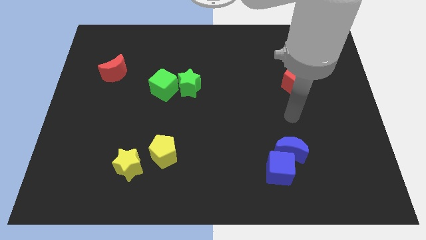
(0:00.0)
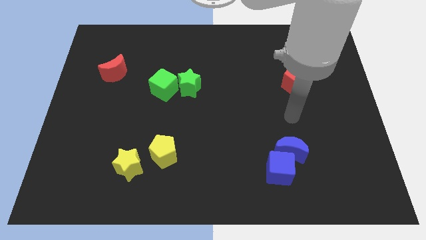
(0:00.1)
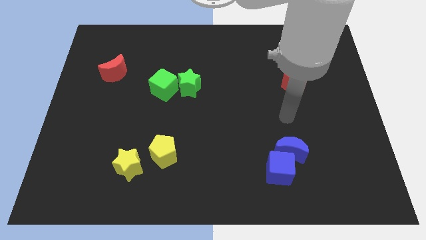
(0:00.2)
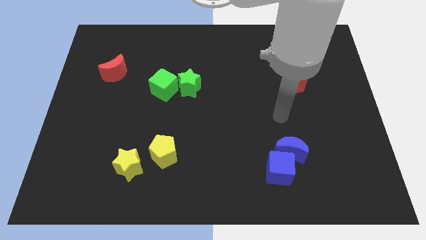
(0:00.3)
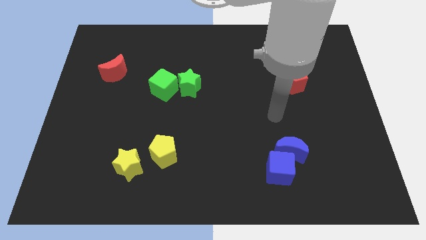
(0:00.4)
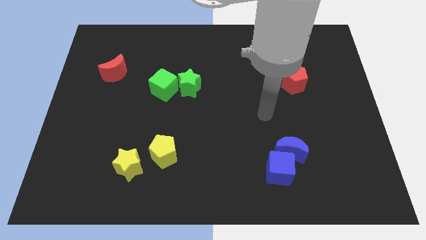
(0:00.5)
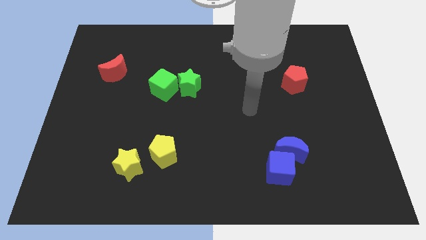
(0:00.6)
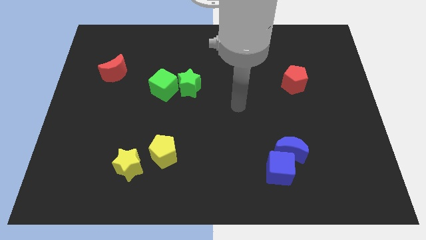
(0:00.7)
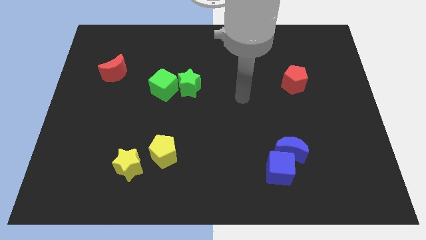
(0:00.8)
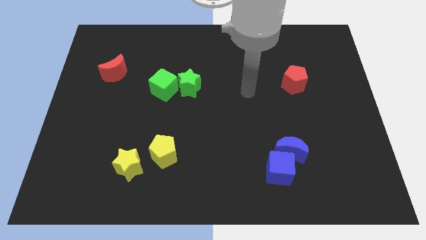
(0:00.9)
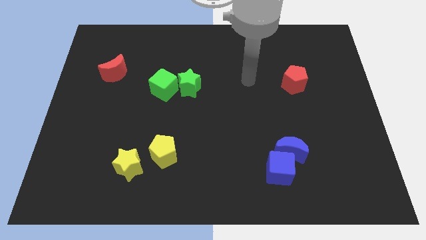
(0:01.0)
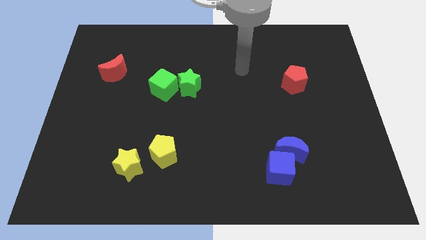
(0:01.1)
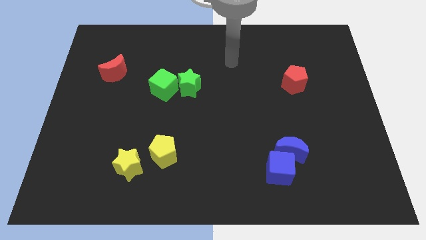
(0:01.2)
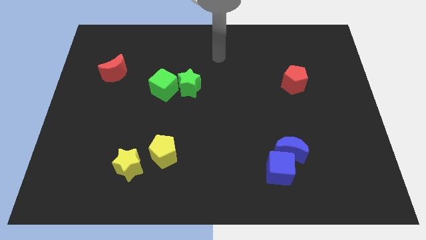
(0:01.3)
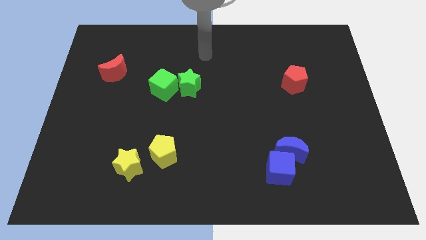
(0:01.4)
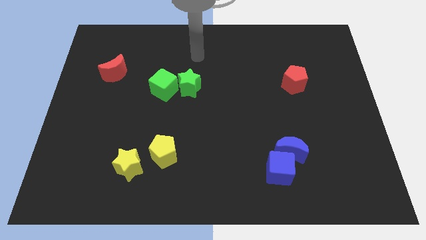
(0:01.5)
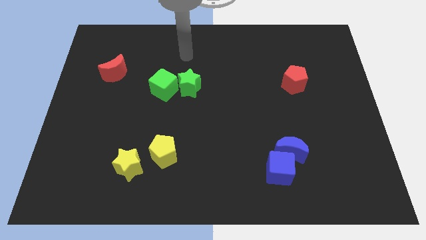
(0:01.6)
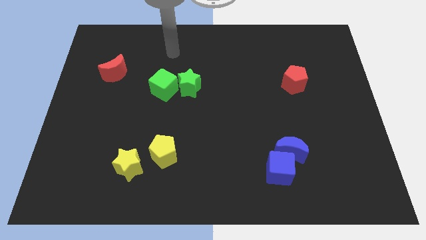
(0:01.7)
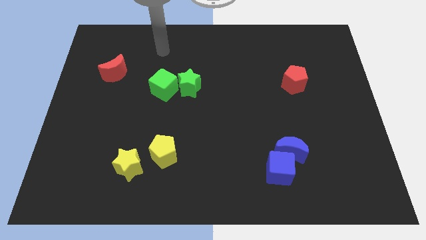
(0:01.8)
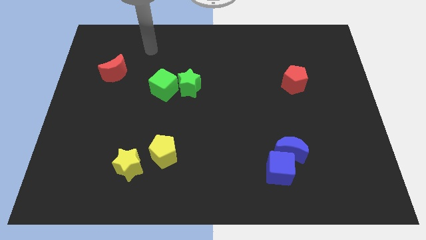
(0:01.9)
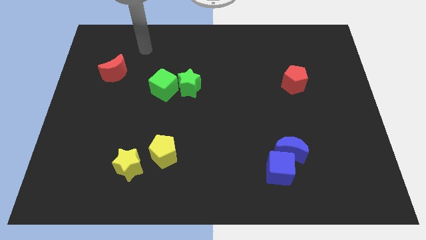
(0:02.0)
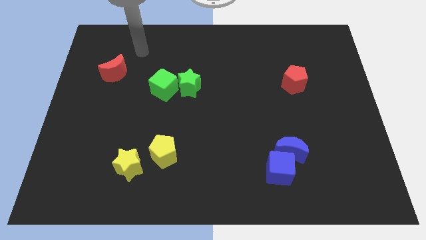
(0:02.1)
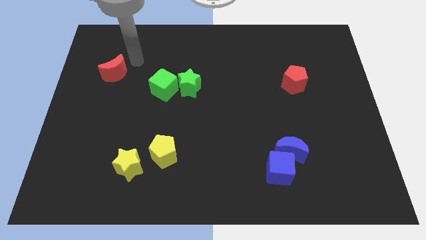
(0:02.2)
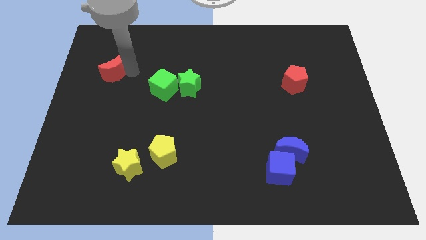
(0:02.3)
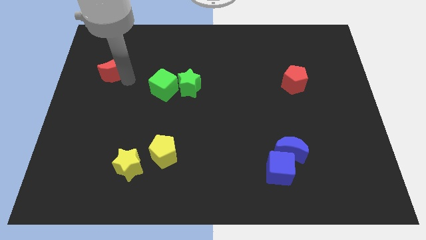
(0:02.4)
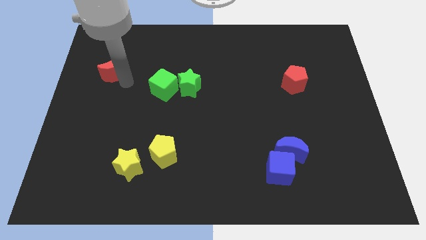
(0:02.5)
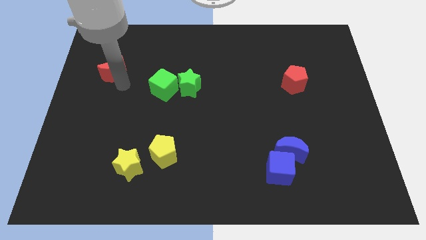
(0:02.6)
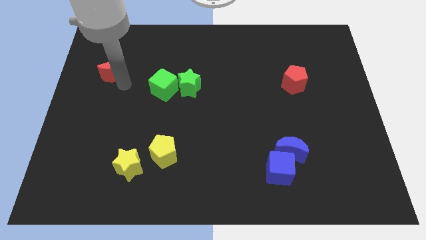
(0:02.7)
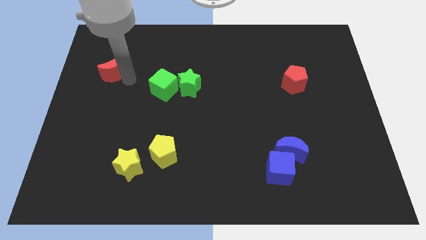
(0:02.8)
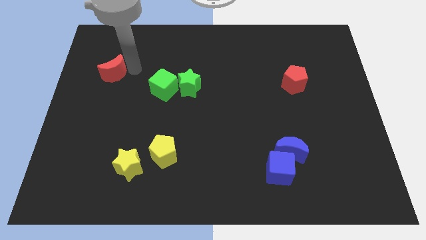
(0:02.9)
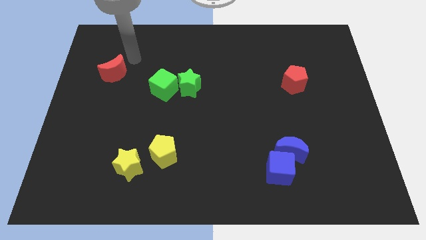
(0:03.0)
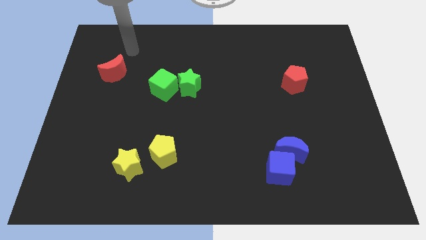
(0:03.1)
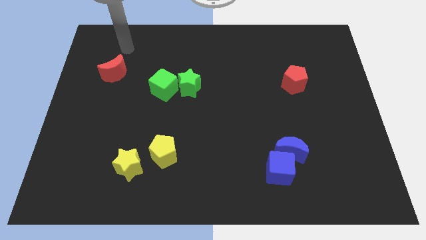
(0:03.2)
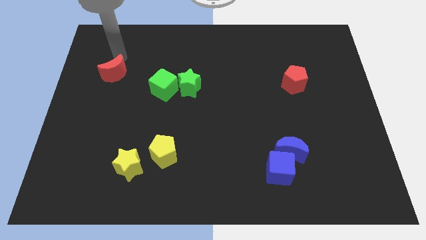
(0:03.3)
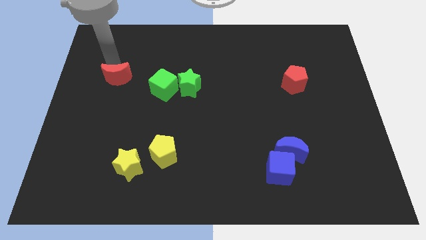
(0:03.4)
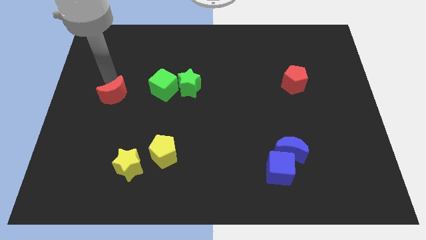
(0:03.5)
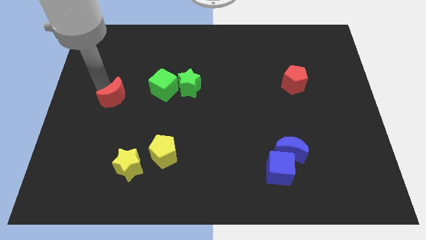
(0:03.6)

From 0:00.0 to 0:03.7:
move the red moon towards the bottom side

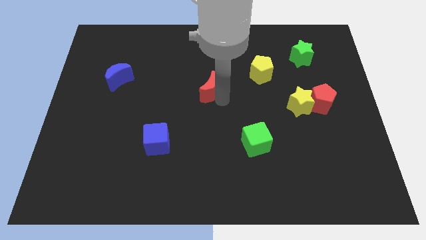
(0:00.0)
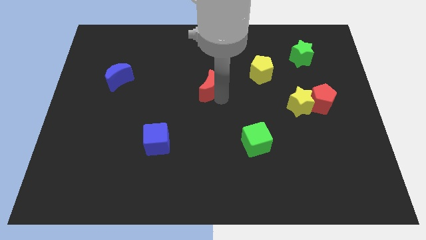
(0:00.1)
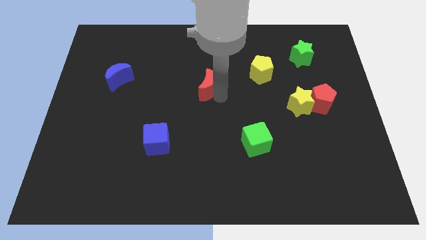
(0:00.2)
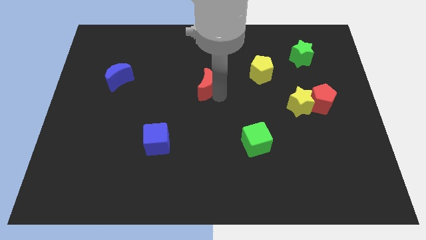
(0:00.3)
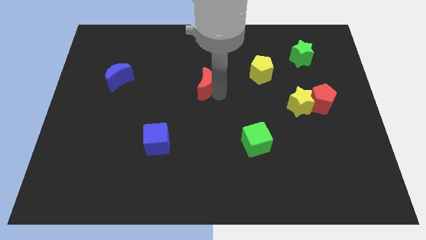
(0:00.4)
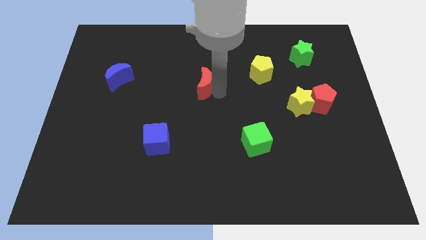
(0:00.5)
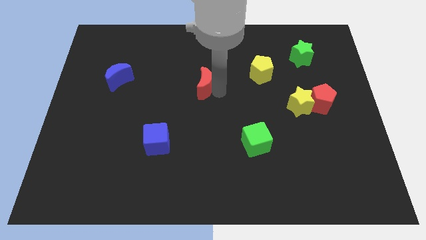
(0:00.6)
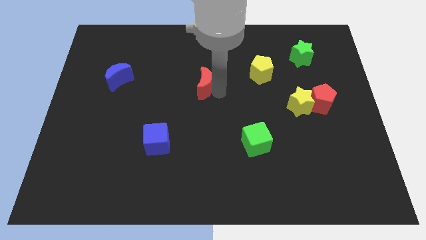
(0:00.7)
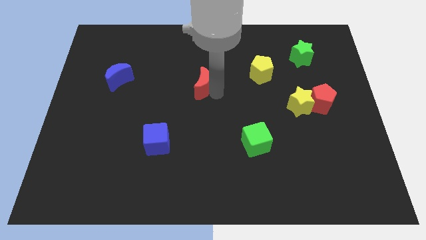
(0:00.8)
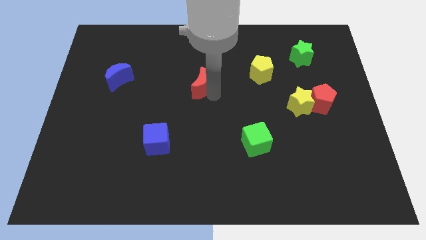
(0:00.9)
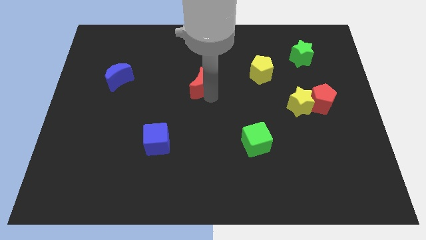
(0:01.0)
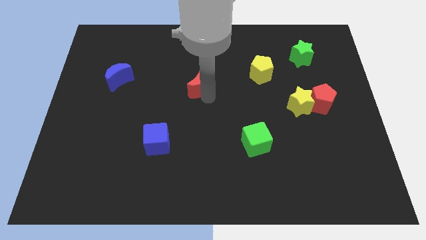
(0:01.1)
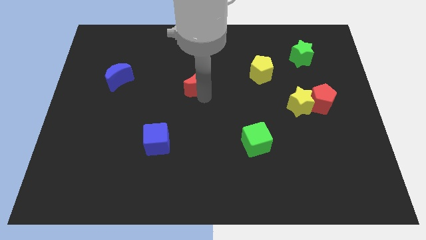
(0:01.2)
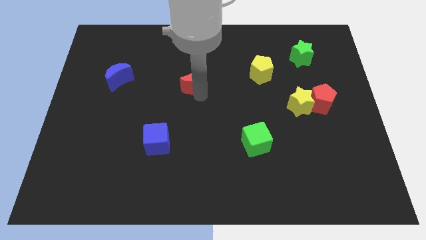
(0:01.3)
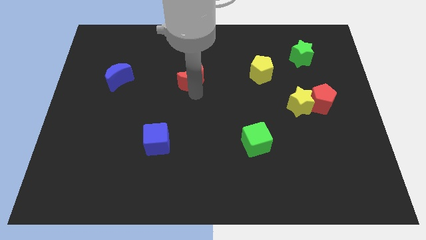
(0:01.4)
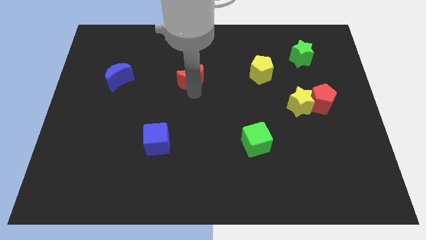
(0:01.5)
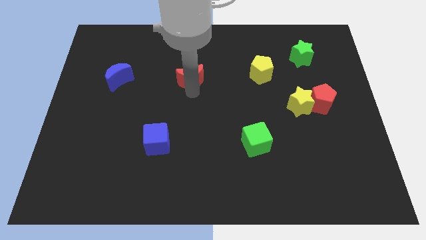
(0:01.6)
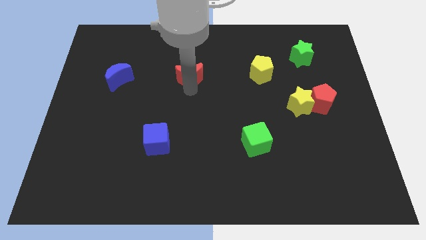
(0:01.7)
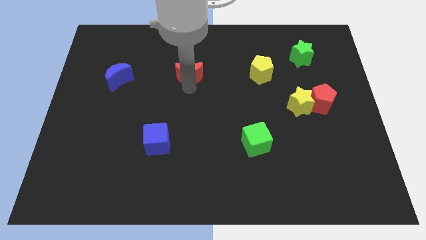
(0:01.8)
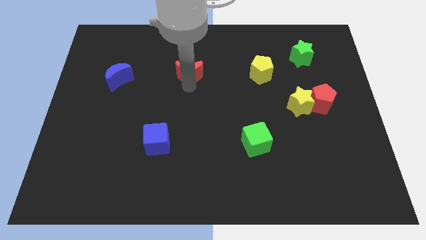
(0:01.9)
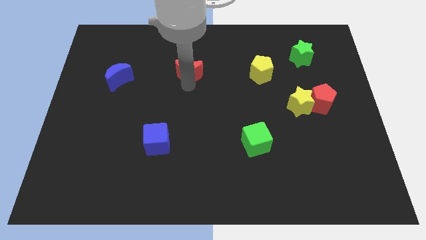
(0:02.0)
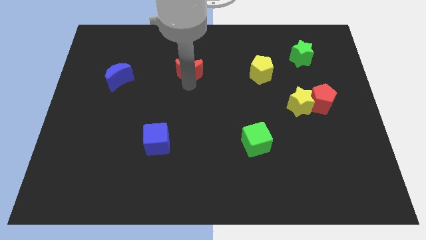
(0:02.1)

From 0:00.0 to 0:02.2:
place the red moon in between yellow pentagon and blue moon

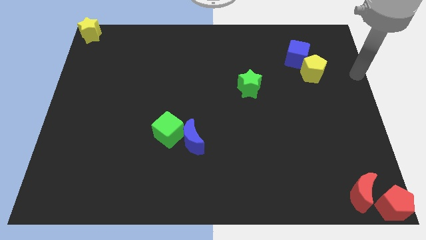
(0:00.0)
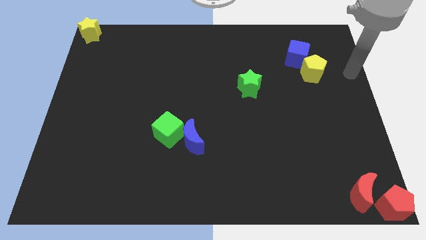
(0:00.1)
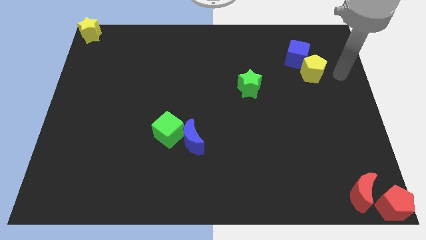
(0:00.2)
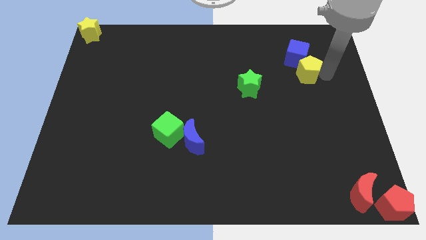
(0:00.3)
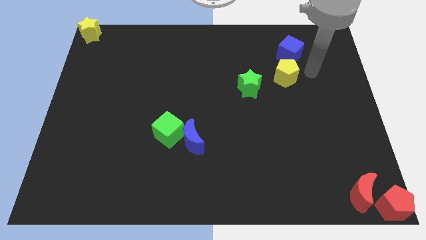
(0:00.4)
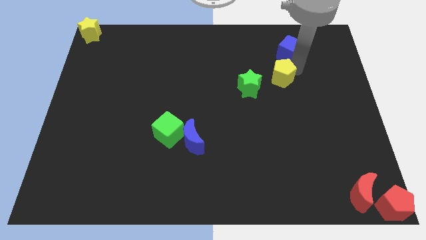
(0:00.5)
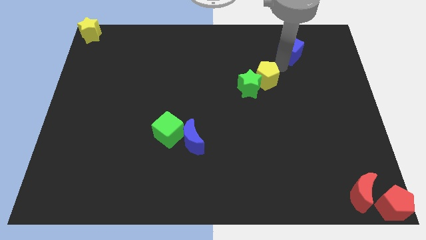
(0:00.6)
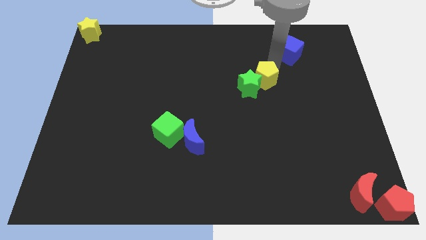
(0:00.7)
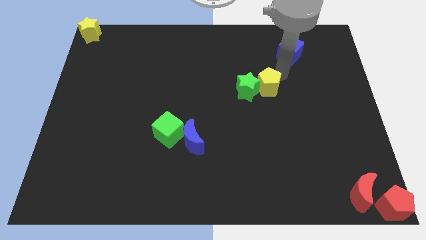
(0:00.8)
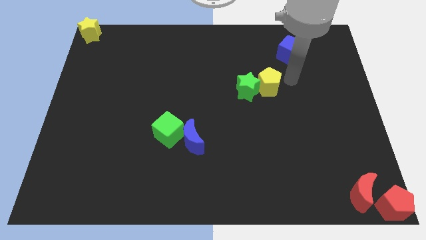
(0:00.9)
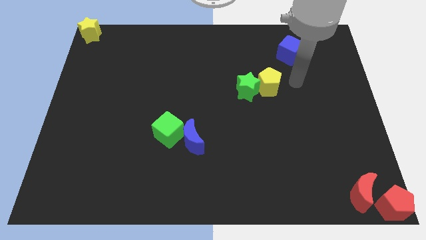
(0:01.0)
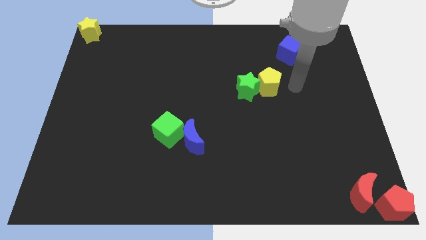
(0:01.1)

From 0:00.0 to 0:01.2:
push the green star with the yellow pentagon

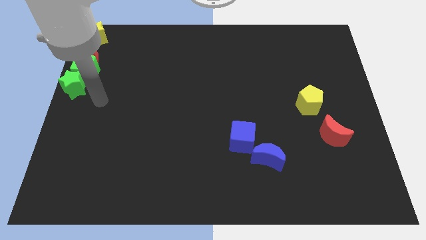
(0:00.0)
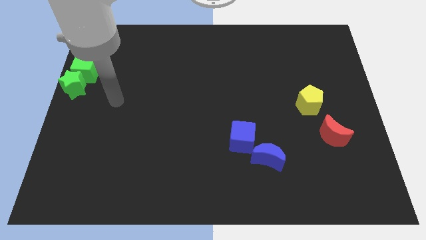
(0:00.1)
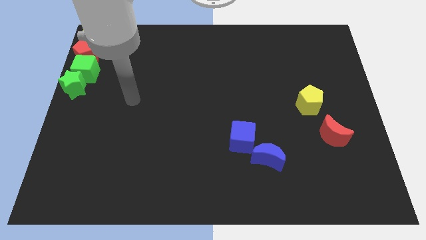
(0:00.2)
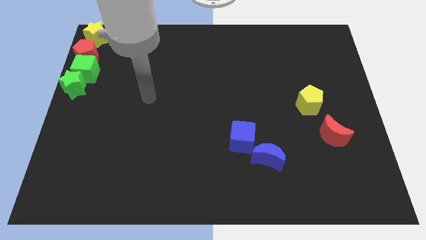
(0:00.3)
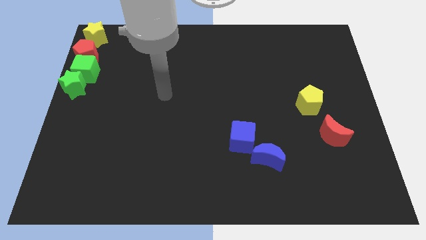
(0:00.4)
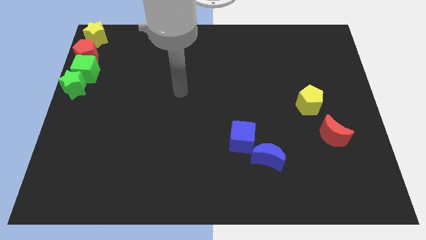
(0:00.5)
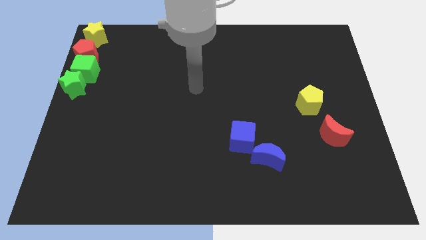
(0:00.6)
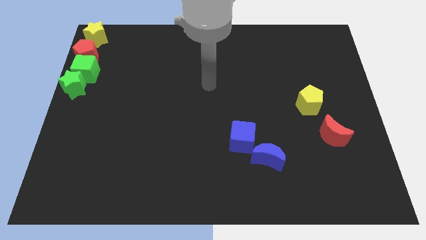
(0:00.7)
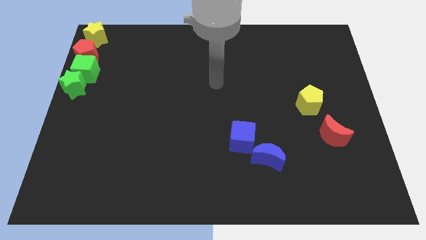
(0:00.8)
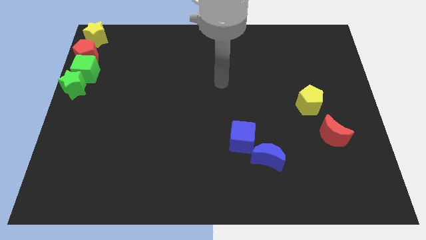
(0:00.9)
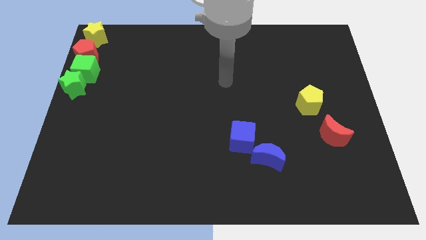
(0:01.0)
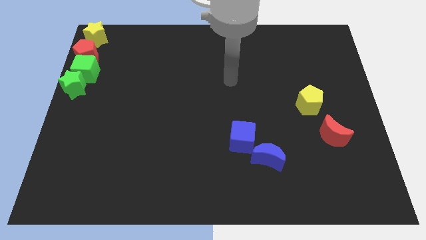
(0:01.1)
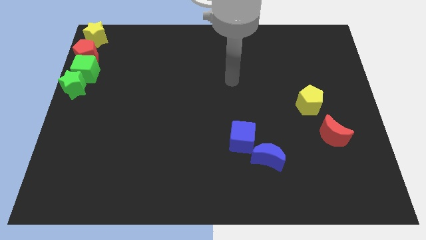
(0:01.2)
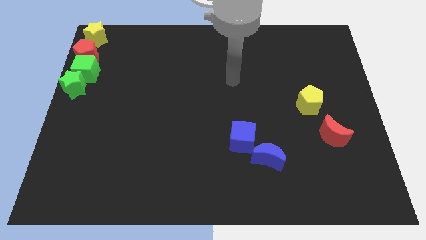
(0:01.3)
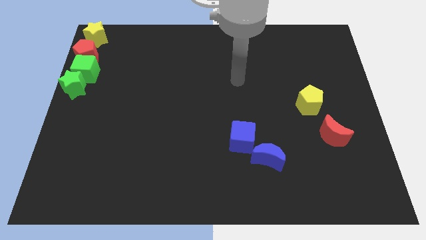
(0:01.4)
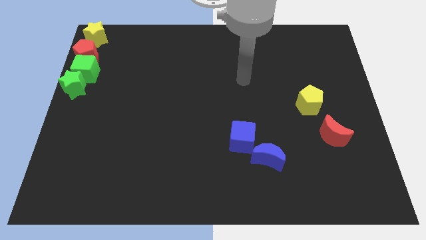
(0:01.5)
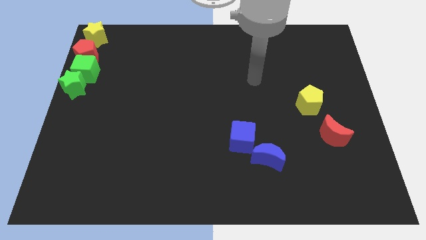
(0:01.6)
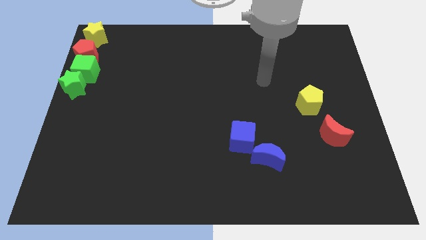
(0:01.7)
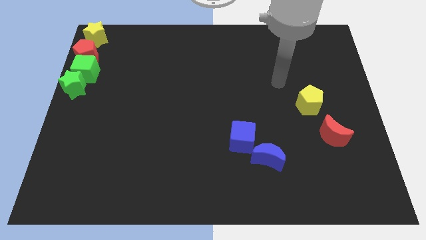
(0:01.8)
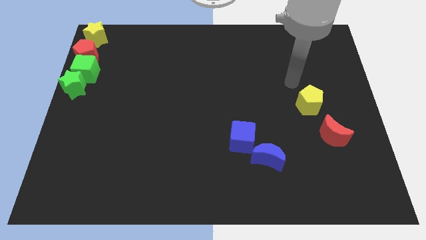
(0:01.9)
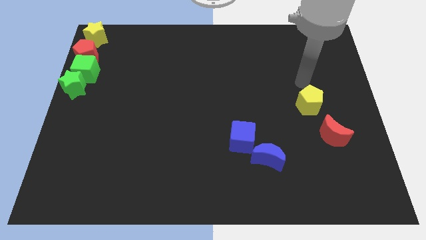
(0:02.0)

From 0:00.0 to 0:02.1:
point your arm at the top of the yellow pentagon
